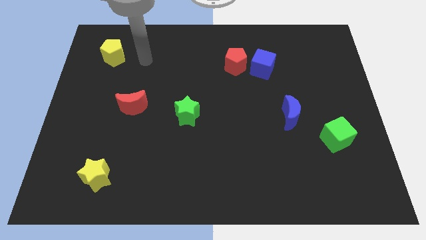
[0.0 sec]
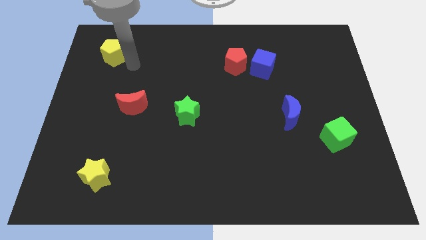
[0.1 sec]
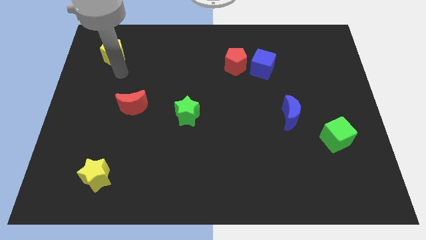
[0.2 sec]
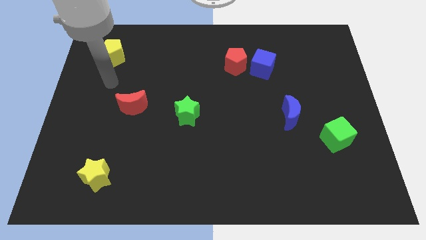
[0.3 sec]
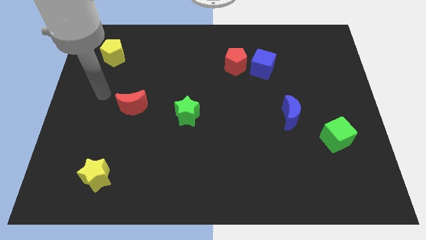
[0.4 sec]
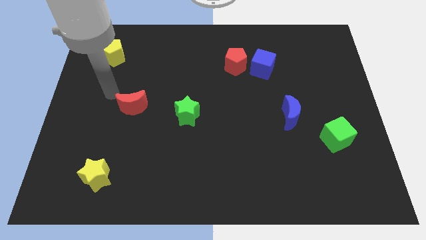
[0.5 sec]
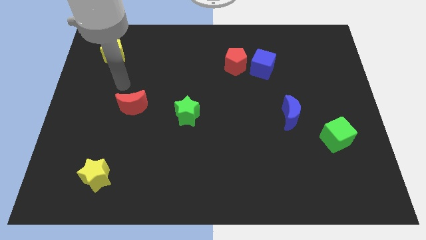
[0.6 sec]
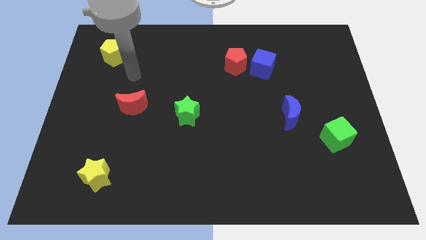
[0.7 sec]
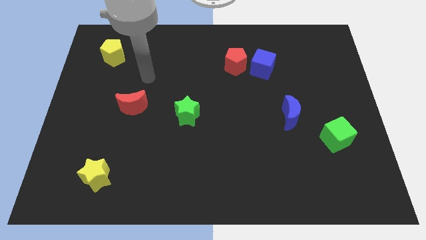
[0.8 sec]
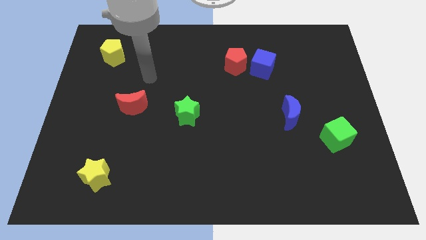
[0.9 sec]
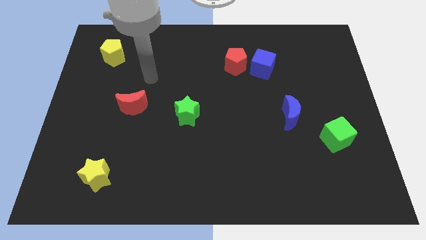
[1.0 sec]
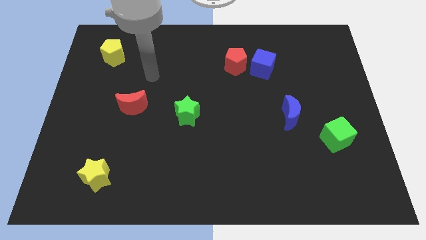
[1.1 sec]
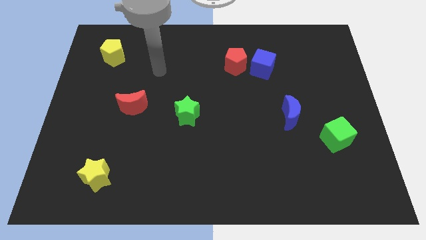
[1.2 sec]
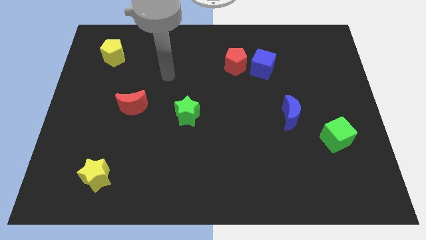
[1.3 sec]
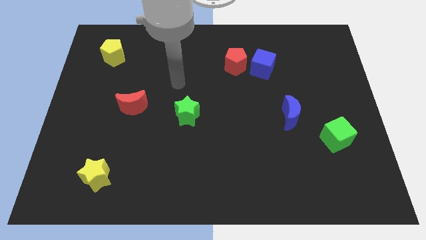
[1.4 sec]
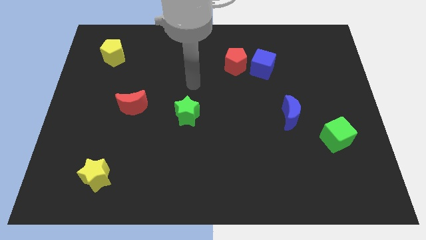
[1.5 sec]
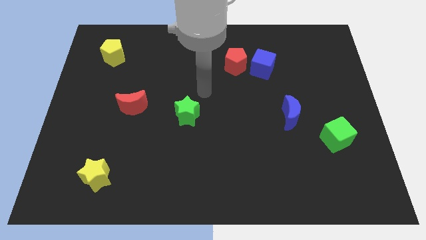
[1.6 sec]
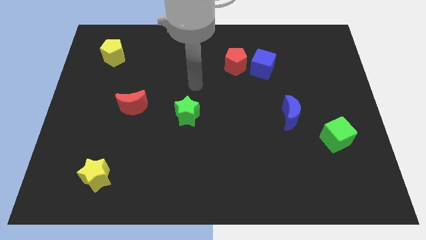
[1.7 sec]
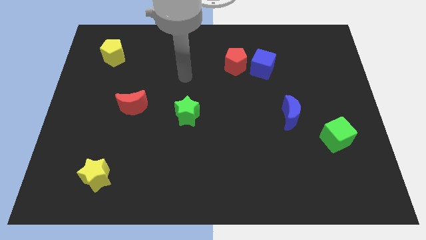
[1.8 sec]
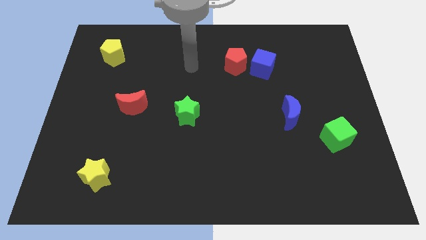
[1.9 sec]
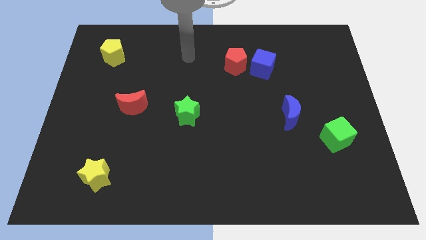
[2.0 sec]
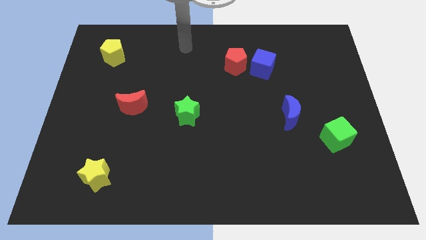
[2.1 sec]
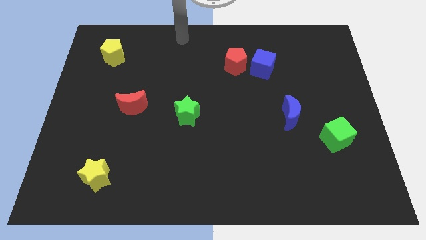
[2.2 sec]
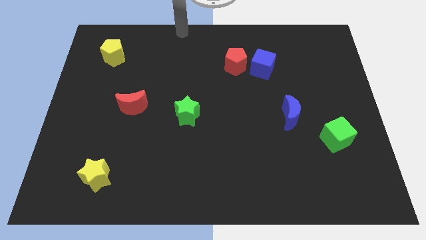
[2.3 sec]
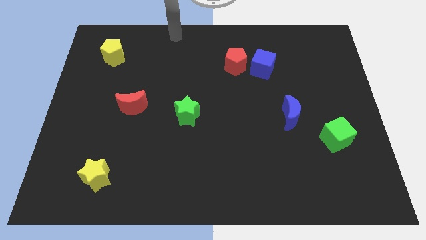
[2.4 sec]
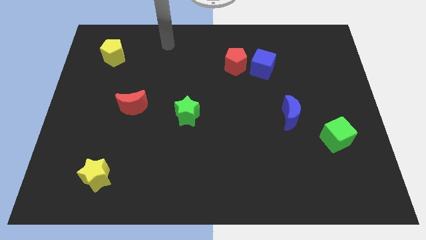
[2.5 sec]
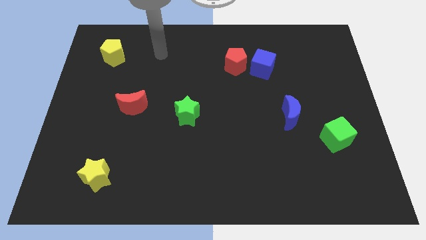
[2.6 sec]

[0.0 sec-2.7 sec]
move the arm towards the top center of the board

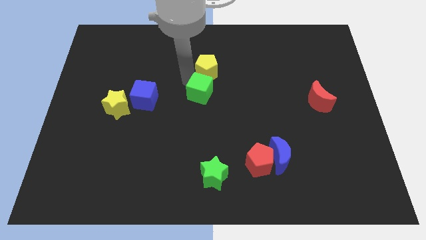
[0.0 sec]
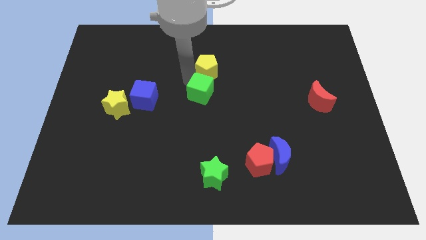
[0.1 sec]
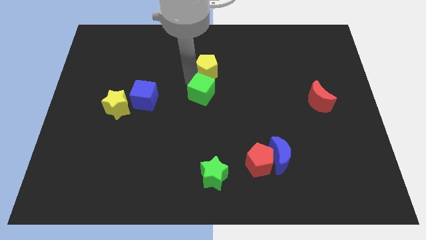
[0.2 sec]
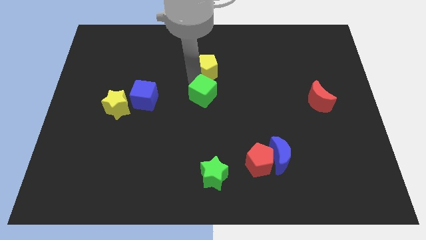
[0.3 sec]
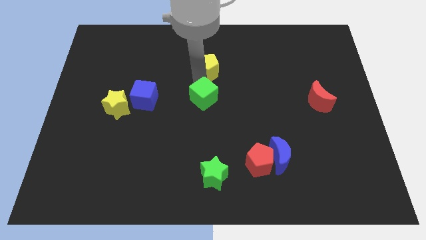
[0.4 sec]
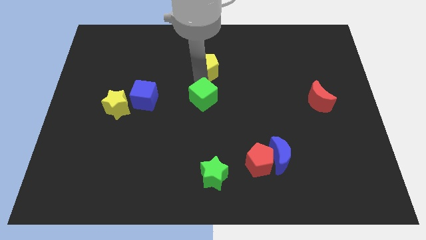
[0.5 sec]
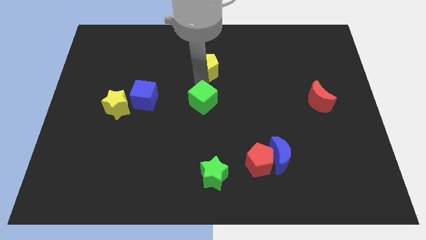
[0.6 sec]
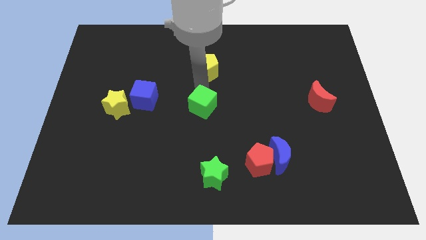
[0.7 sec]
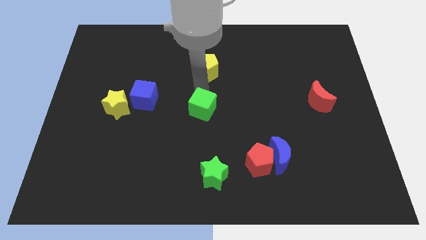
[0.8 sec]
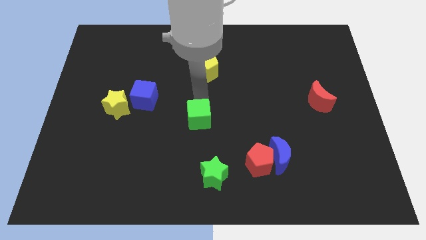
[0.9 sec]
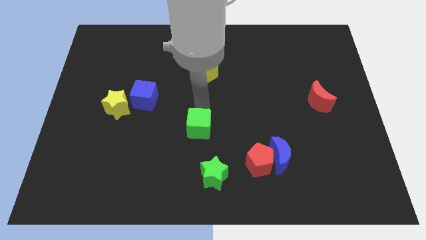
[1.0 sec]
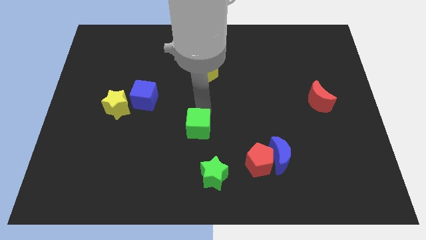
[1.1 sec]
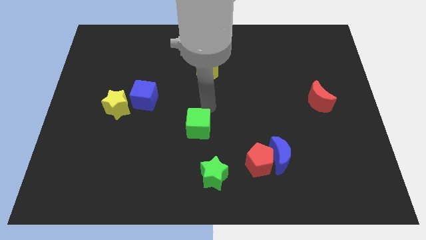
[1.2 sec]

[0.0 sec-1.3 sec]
separate green cube and yellow pentagon

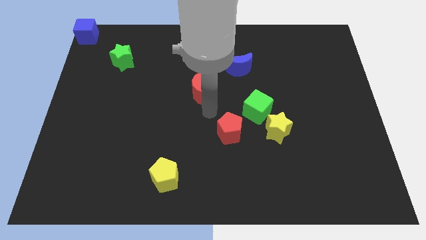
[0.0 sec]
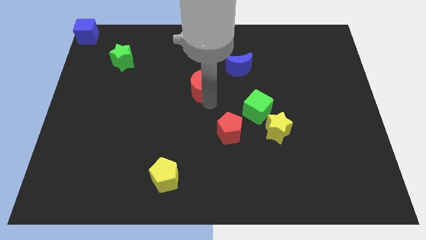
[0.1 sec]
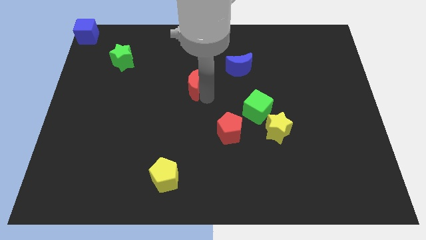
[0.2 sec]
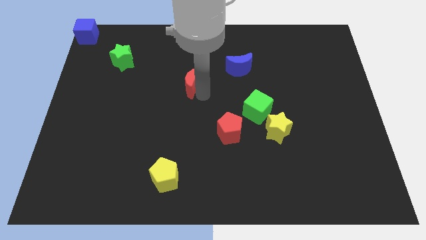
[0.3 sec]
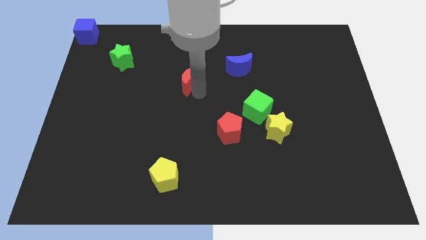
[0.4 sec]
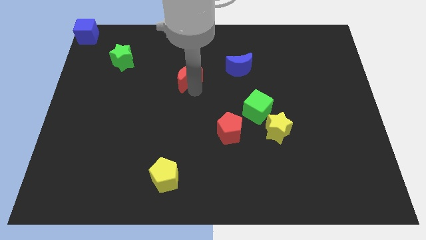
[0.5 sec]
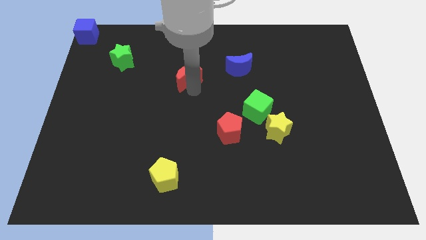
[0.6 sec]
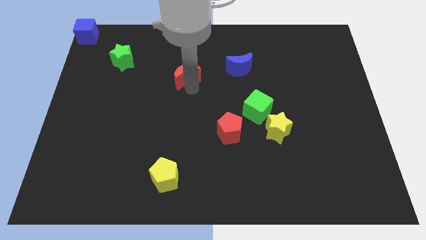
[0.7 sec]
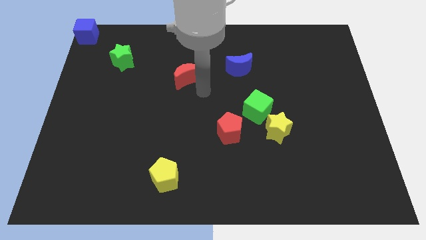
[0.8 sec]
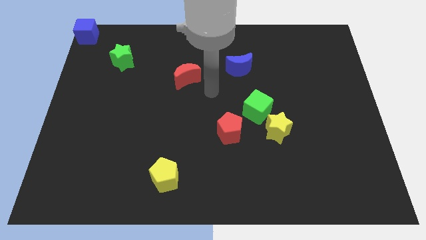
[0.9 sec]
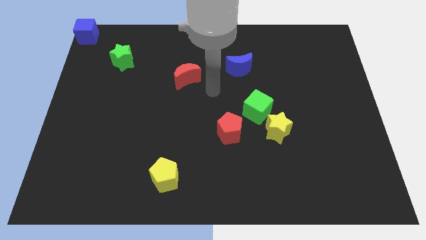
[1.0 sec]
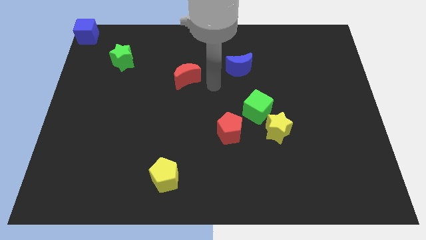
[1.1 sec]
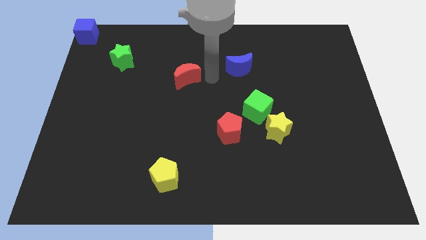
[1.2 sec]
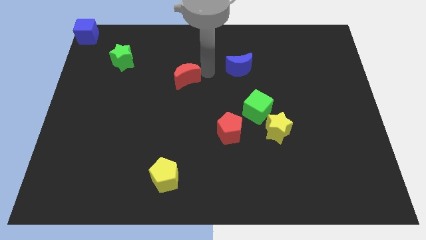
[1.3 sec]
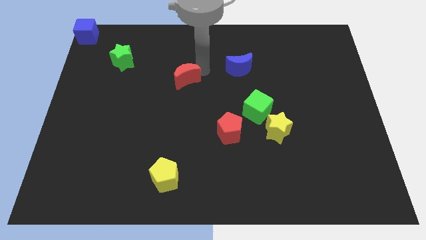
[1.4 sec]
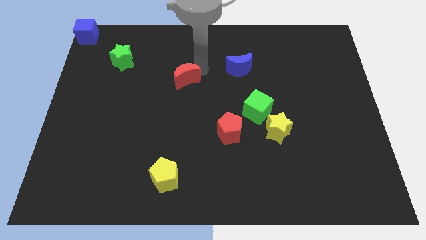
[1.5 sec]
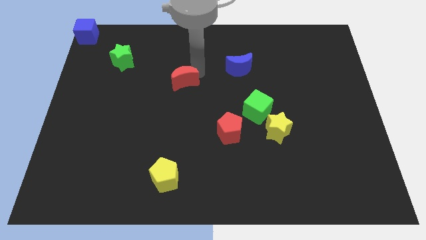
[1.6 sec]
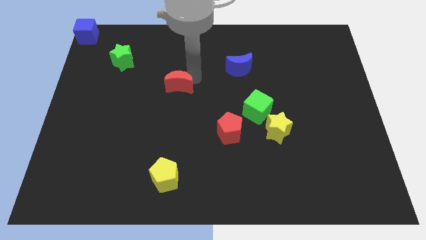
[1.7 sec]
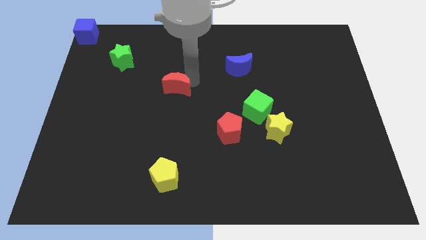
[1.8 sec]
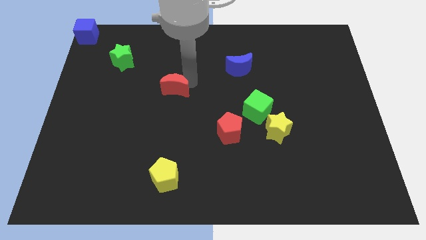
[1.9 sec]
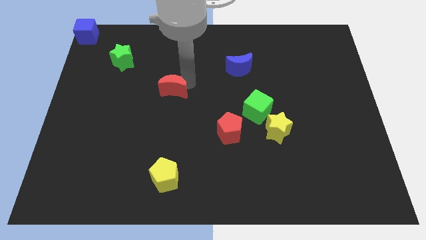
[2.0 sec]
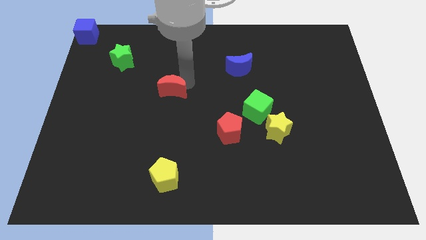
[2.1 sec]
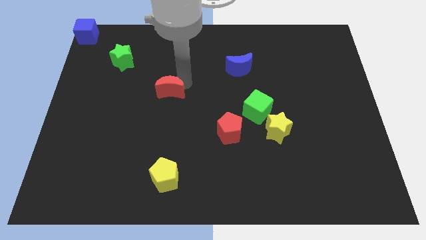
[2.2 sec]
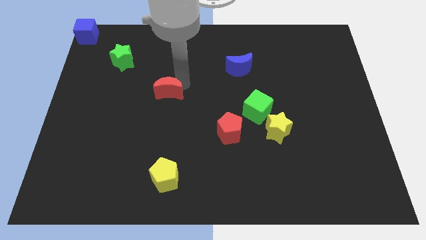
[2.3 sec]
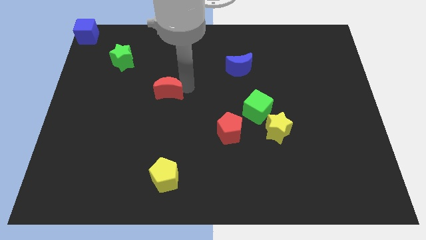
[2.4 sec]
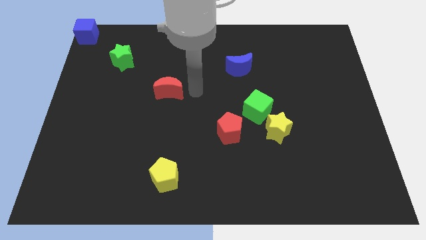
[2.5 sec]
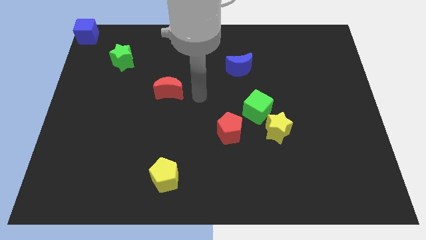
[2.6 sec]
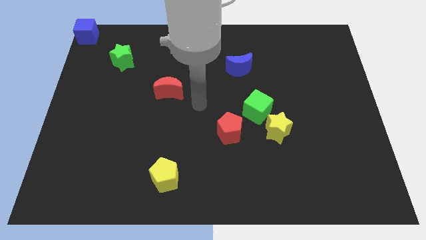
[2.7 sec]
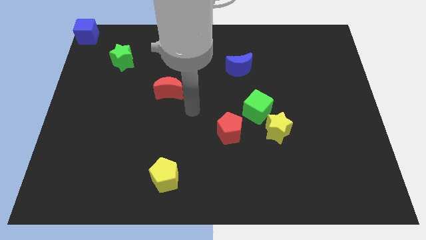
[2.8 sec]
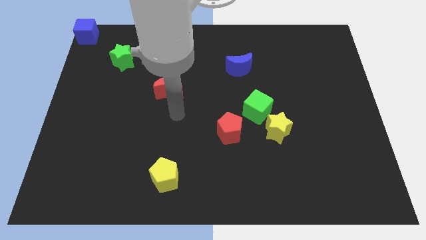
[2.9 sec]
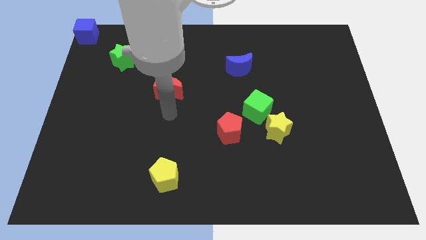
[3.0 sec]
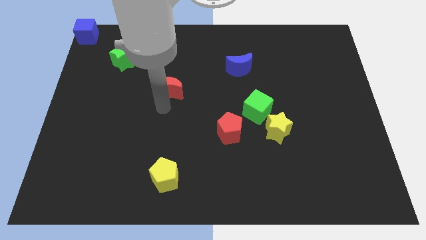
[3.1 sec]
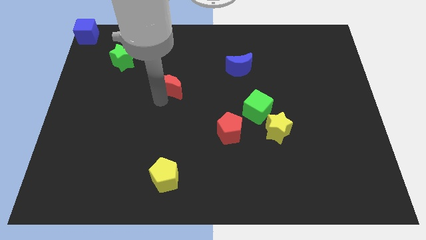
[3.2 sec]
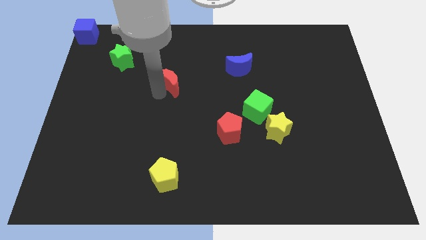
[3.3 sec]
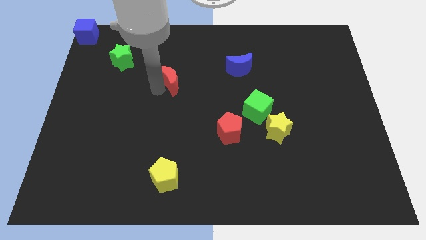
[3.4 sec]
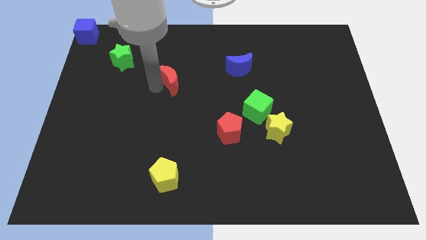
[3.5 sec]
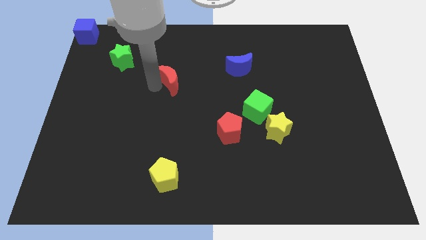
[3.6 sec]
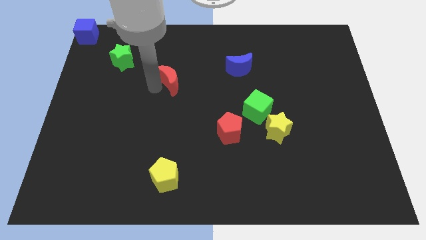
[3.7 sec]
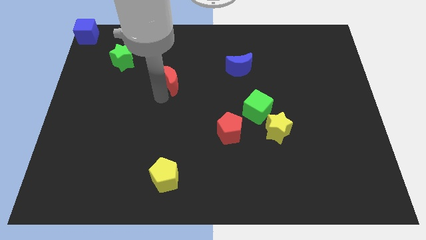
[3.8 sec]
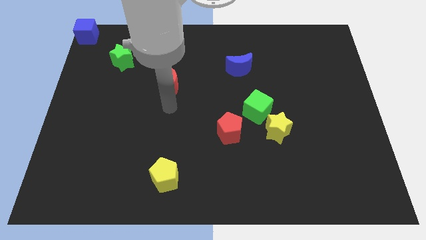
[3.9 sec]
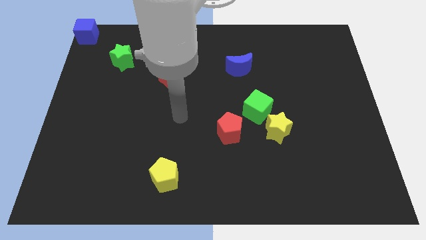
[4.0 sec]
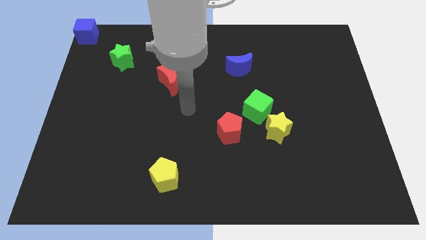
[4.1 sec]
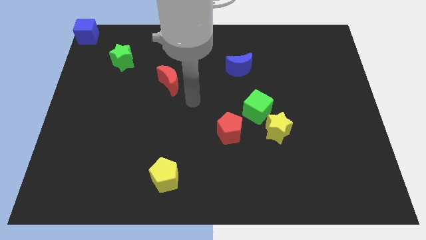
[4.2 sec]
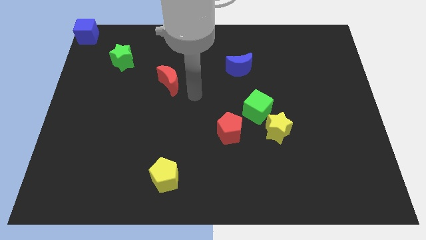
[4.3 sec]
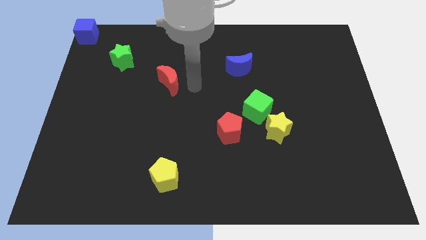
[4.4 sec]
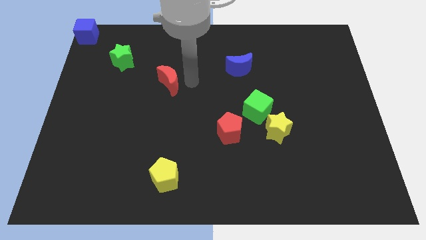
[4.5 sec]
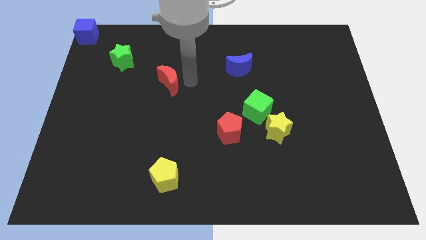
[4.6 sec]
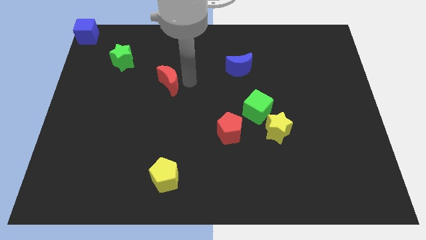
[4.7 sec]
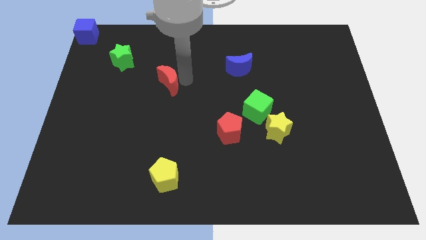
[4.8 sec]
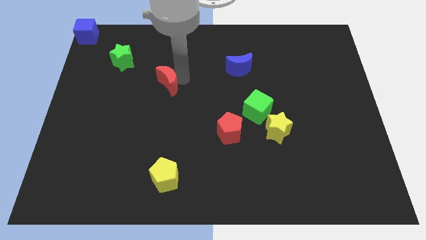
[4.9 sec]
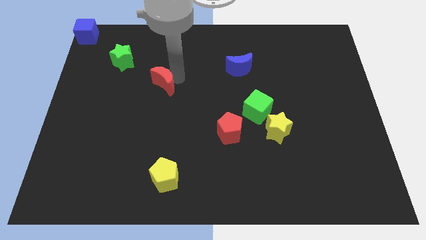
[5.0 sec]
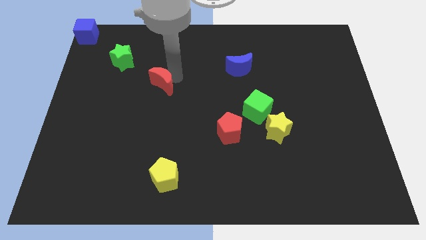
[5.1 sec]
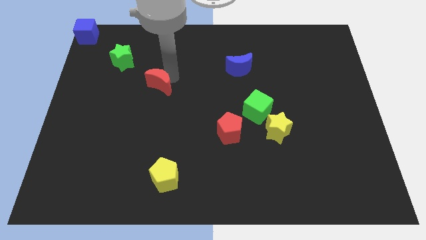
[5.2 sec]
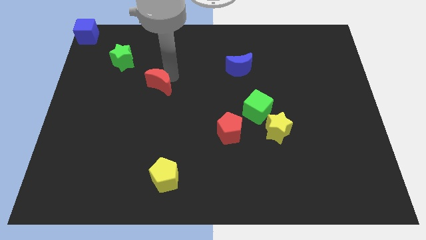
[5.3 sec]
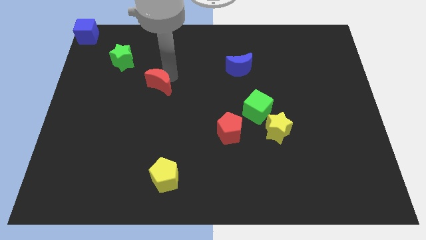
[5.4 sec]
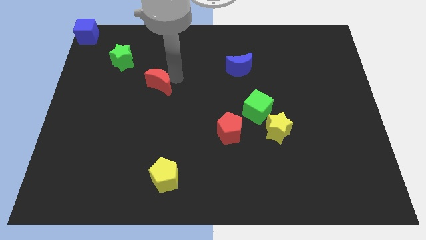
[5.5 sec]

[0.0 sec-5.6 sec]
move the red crescent to the below right of the green star
